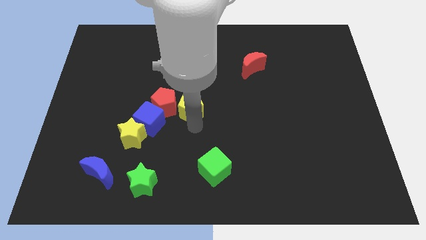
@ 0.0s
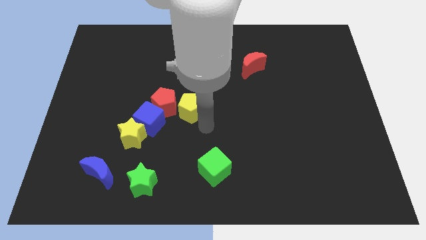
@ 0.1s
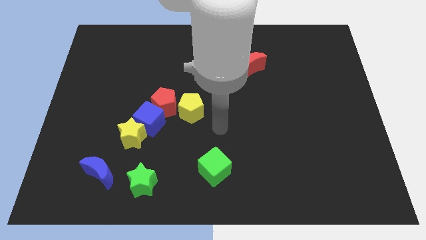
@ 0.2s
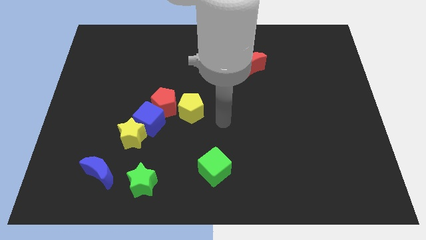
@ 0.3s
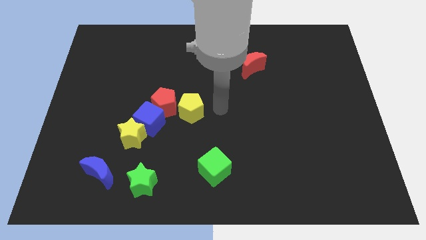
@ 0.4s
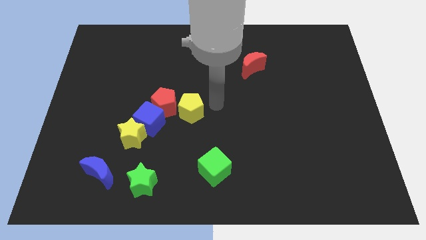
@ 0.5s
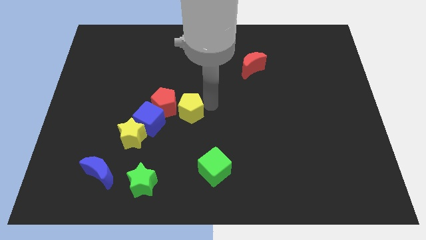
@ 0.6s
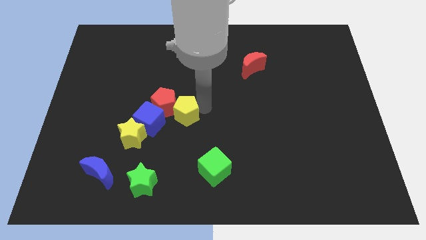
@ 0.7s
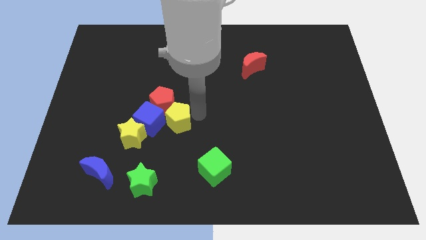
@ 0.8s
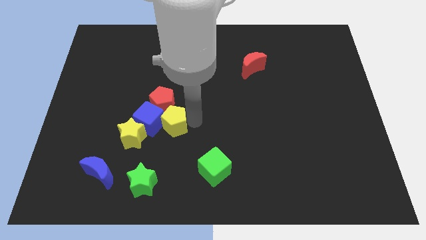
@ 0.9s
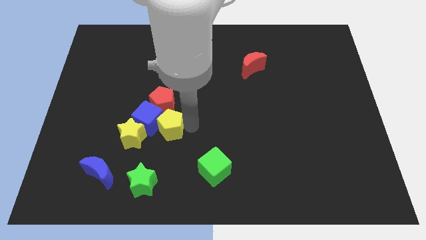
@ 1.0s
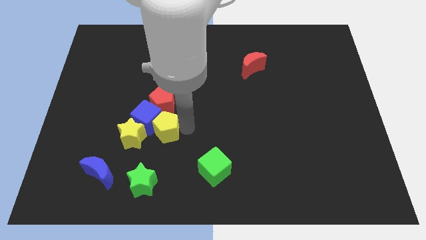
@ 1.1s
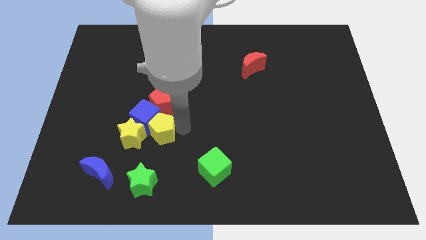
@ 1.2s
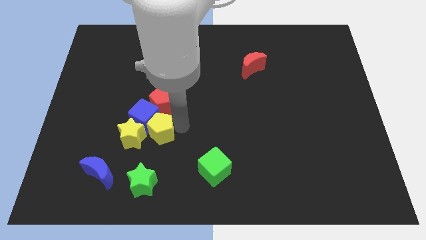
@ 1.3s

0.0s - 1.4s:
make the yellow pentagon right beside the blue cube

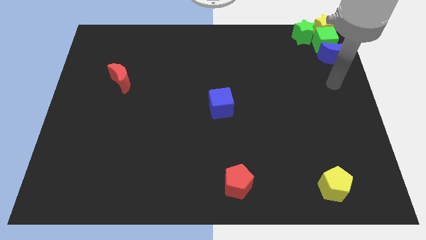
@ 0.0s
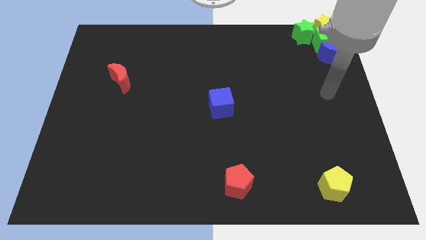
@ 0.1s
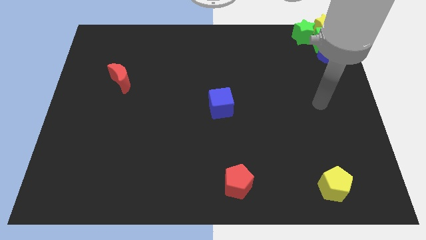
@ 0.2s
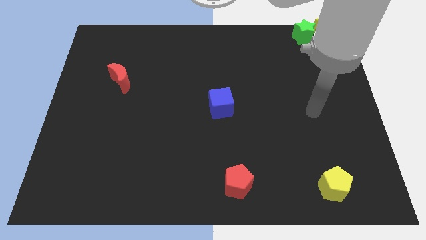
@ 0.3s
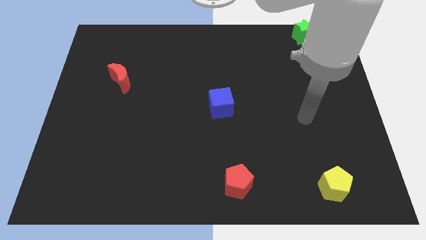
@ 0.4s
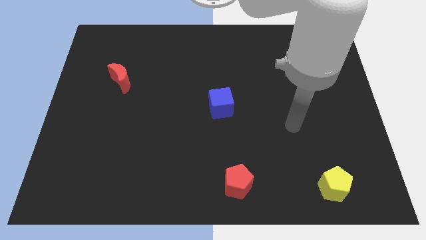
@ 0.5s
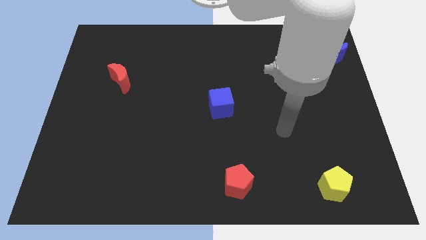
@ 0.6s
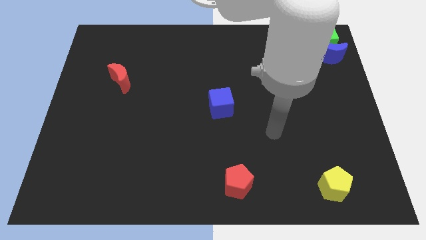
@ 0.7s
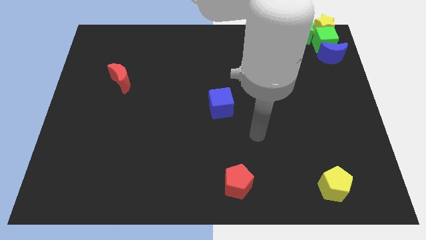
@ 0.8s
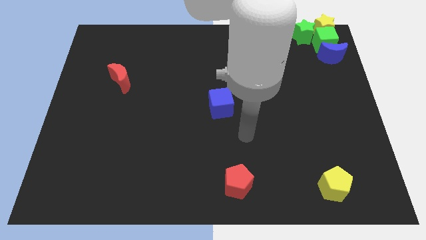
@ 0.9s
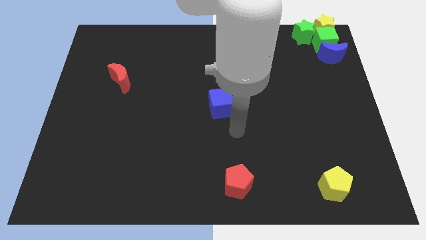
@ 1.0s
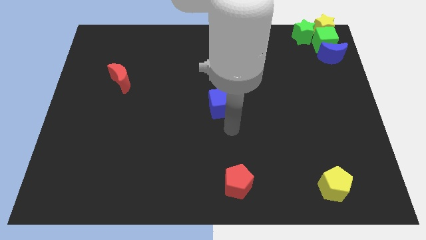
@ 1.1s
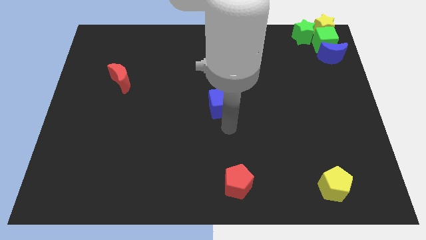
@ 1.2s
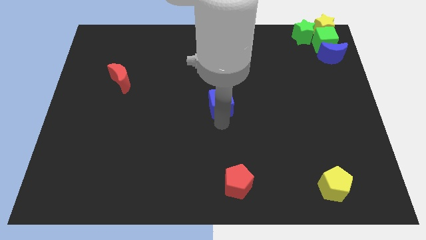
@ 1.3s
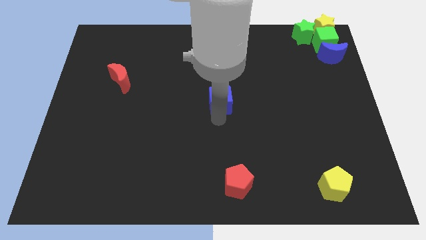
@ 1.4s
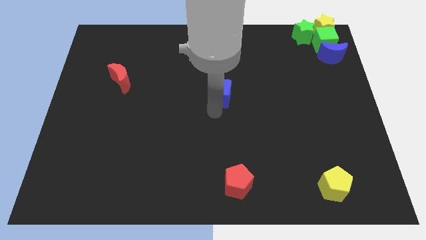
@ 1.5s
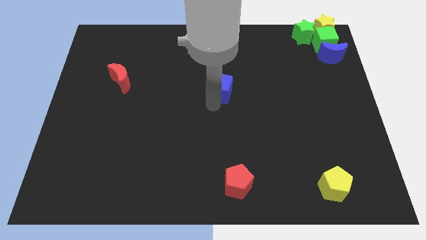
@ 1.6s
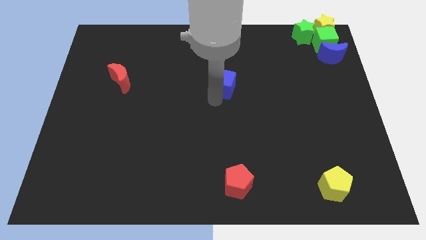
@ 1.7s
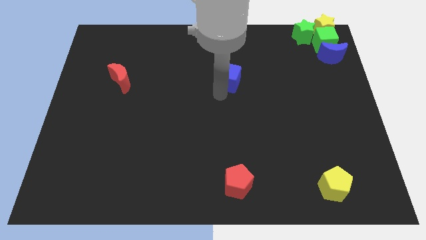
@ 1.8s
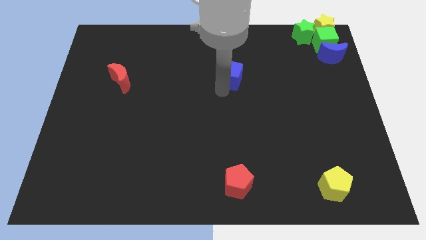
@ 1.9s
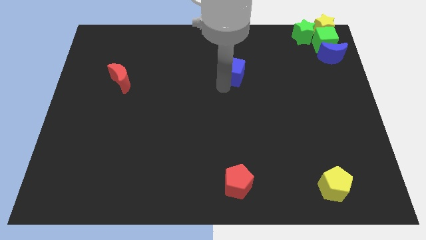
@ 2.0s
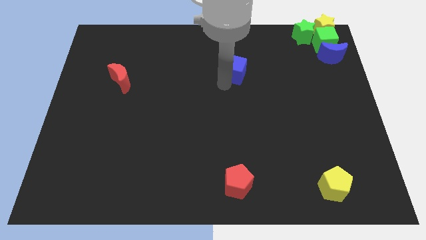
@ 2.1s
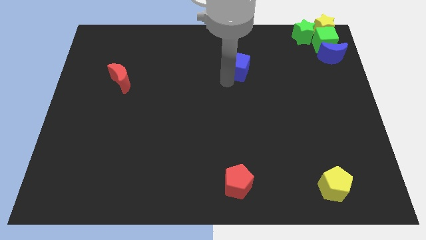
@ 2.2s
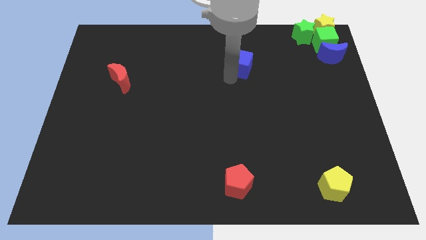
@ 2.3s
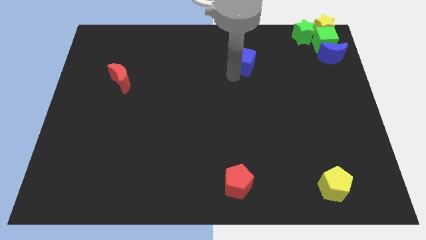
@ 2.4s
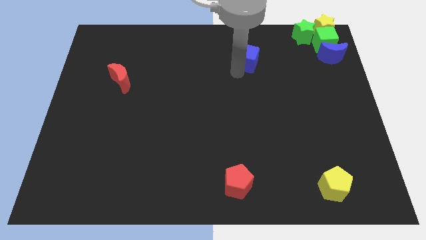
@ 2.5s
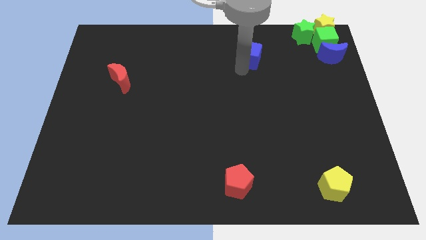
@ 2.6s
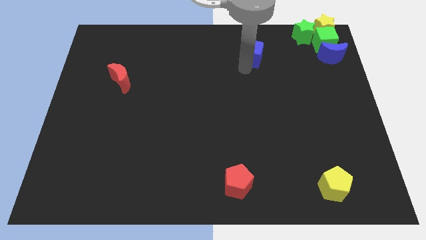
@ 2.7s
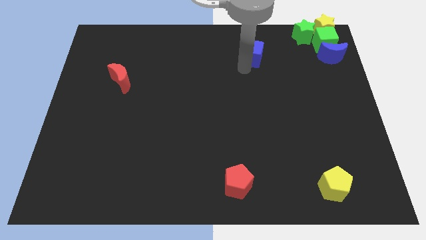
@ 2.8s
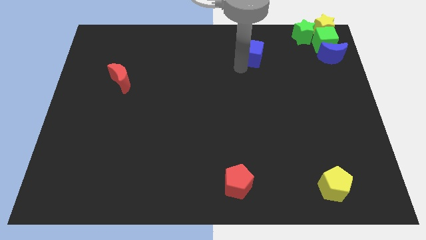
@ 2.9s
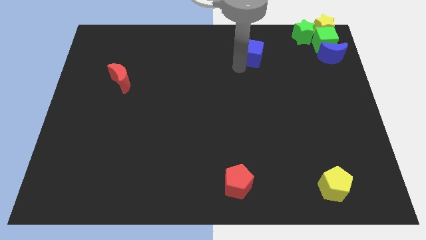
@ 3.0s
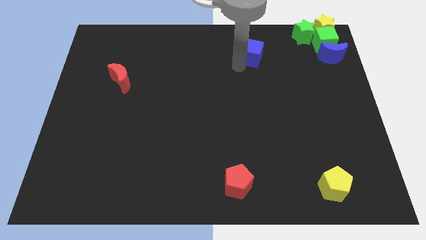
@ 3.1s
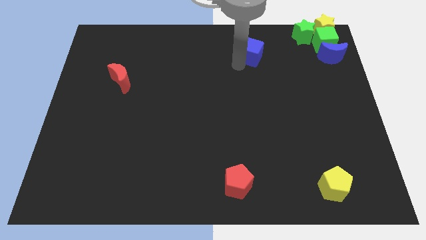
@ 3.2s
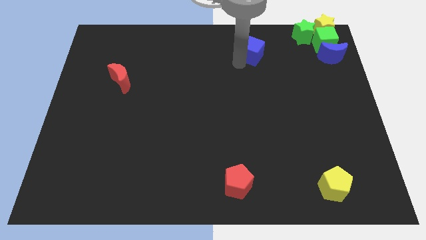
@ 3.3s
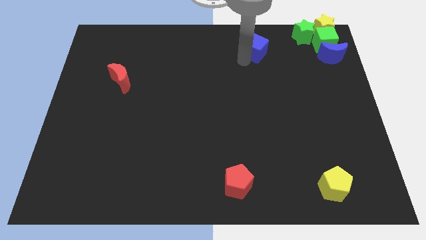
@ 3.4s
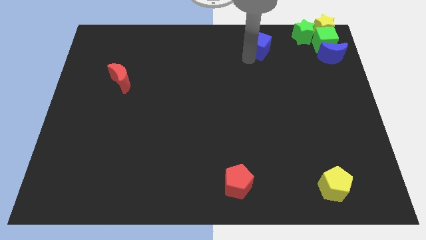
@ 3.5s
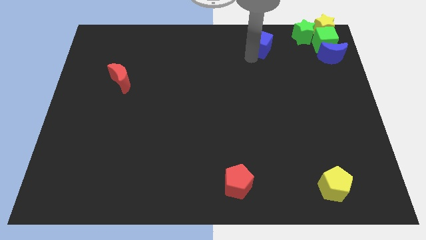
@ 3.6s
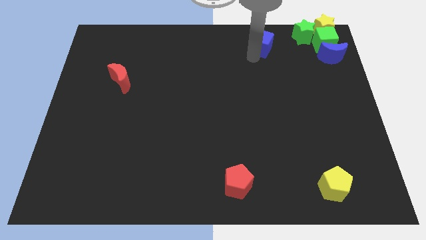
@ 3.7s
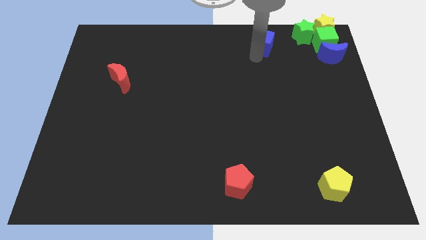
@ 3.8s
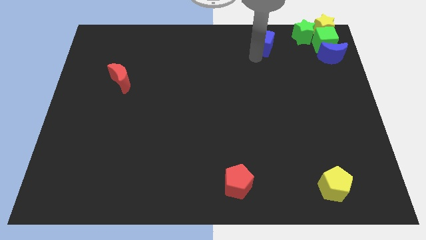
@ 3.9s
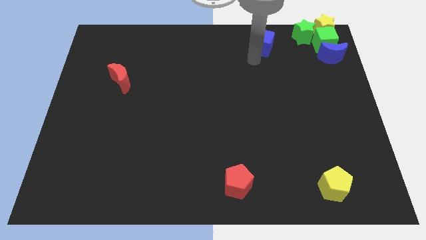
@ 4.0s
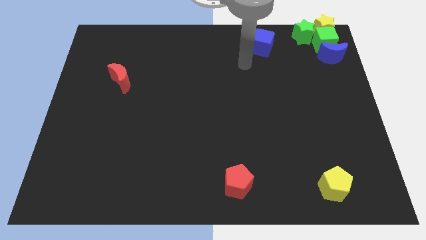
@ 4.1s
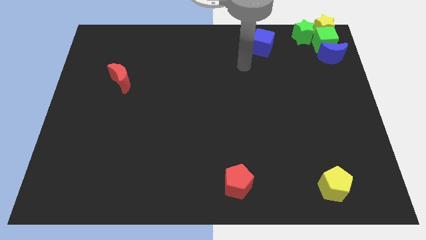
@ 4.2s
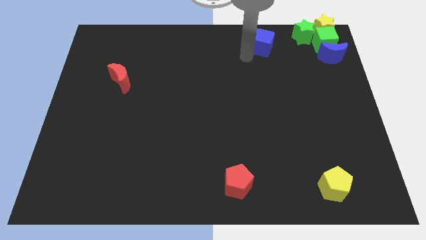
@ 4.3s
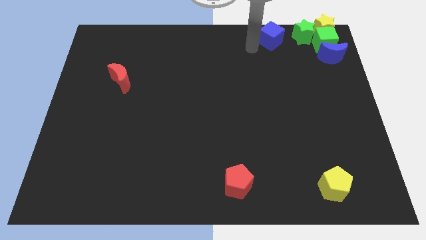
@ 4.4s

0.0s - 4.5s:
move the blue cube to the left of the green star

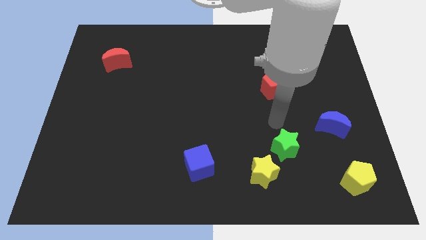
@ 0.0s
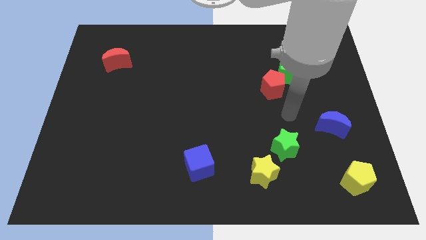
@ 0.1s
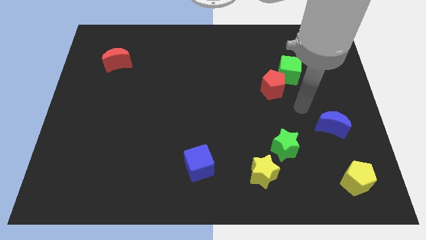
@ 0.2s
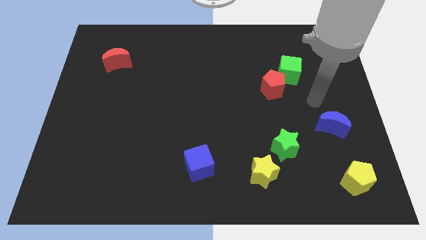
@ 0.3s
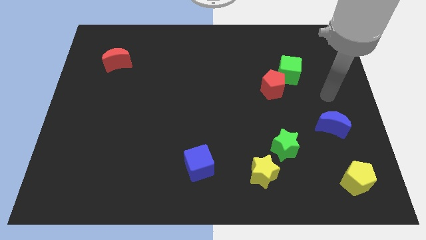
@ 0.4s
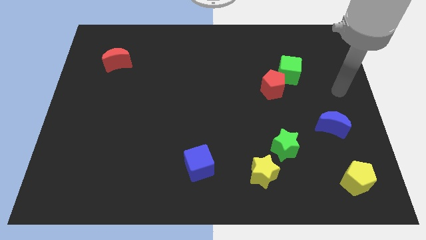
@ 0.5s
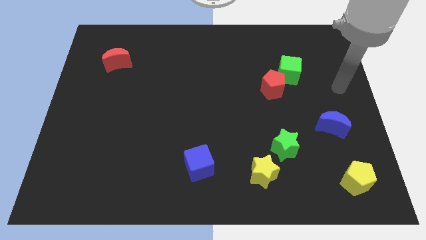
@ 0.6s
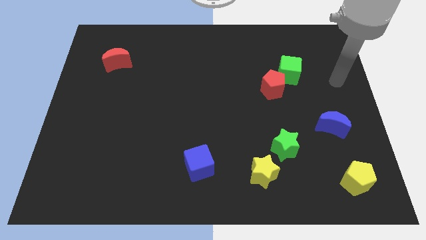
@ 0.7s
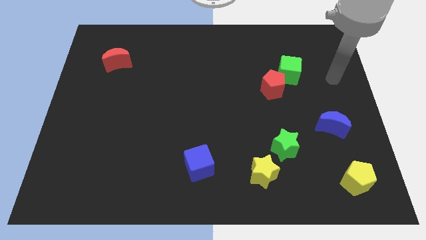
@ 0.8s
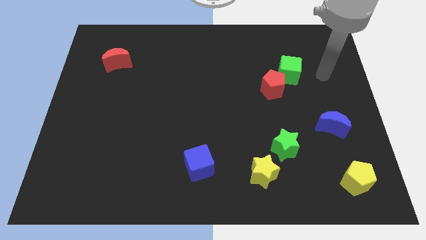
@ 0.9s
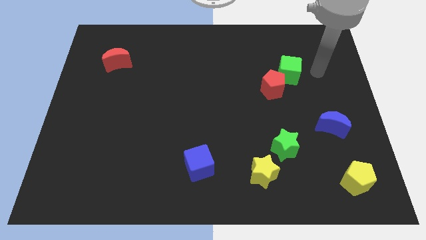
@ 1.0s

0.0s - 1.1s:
place your hand at right side of the green star

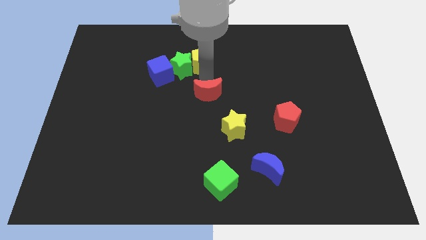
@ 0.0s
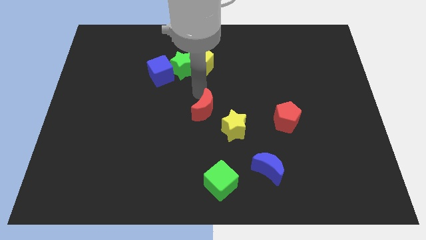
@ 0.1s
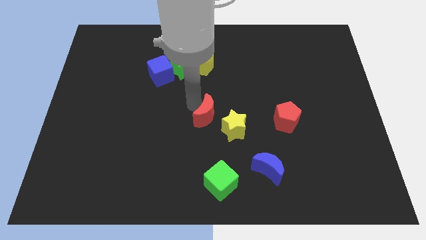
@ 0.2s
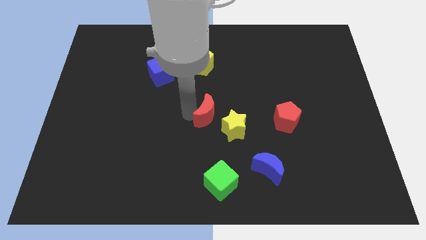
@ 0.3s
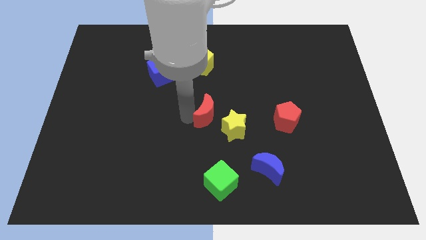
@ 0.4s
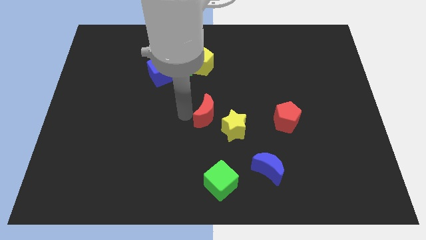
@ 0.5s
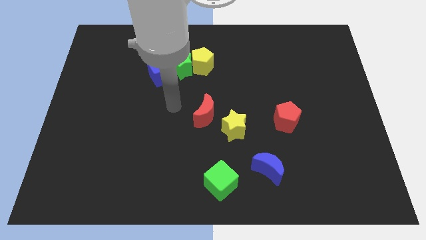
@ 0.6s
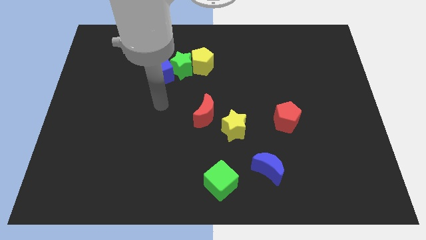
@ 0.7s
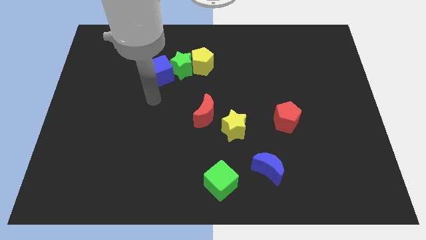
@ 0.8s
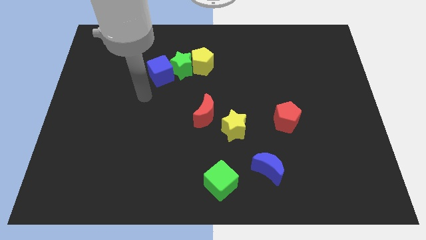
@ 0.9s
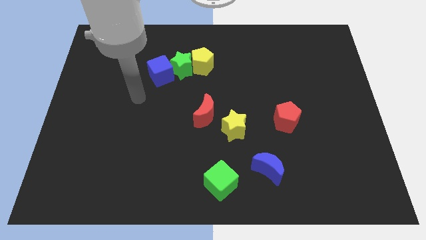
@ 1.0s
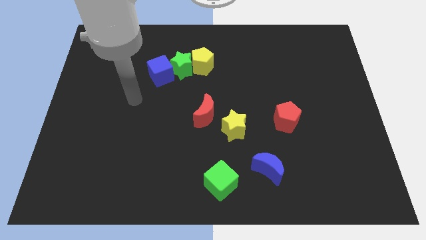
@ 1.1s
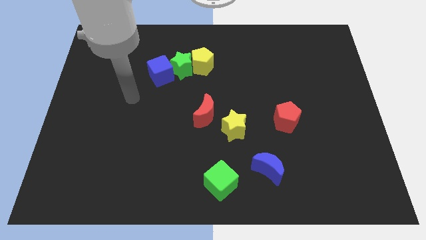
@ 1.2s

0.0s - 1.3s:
move the red crescent to the center of the board

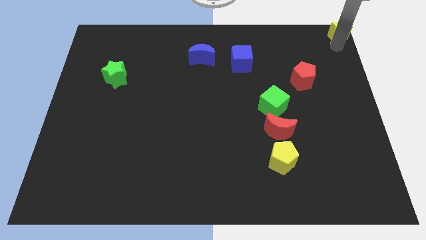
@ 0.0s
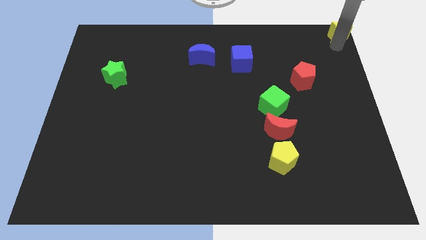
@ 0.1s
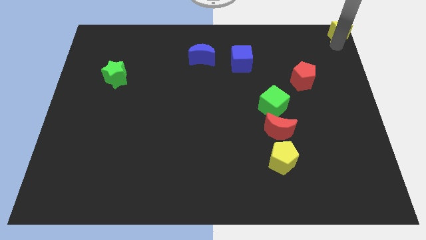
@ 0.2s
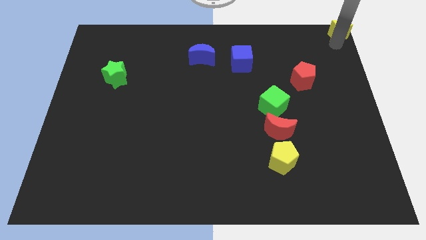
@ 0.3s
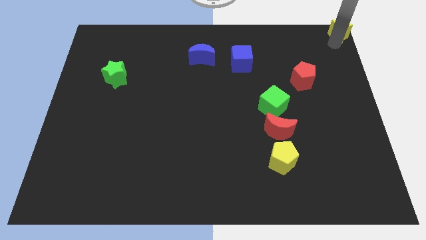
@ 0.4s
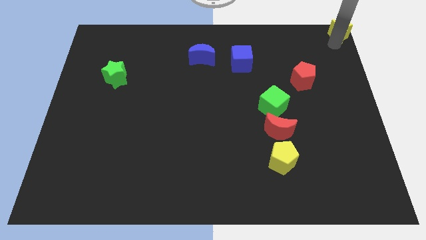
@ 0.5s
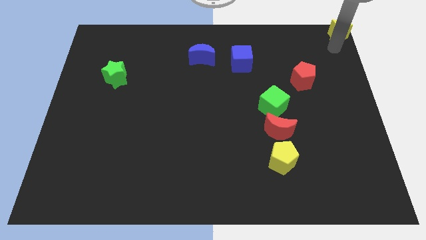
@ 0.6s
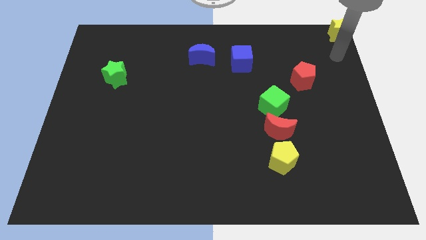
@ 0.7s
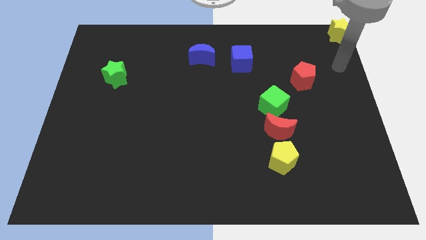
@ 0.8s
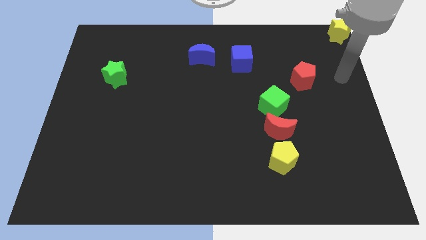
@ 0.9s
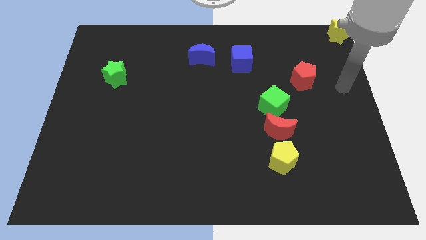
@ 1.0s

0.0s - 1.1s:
move your arm away from yellow star
